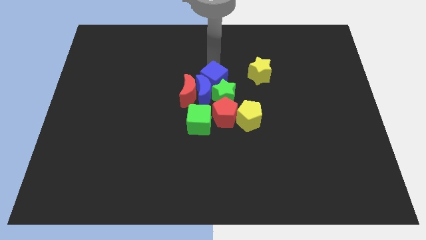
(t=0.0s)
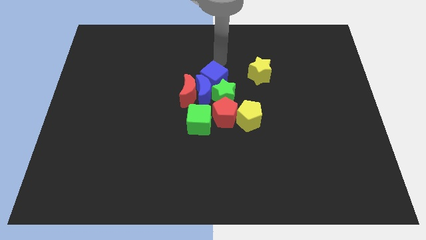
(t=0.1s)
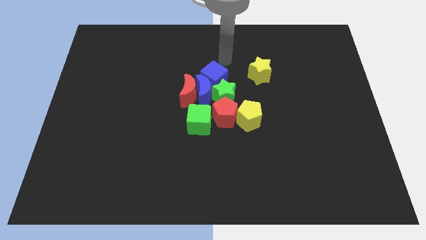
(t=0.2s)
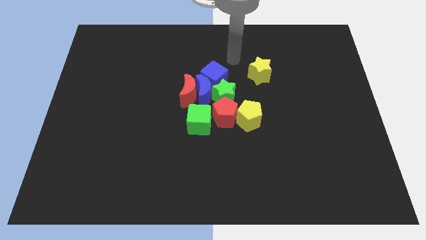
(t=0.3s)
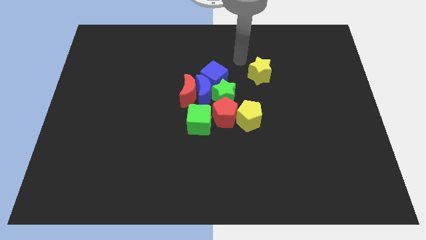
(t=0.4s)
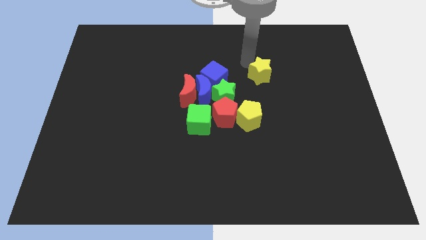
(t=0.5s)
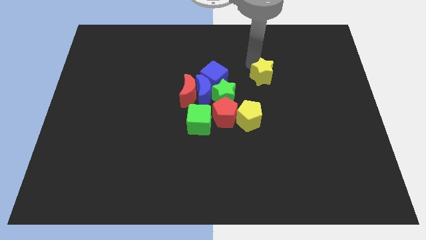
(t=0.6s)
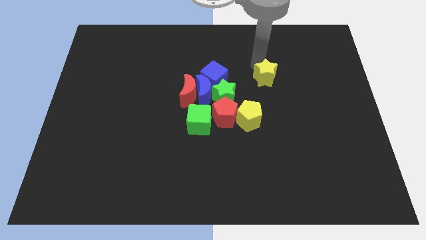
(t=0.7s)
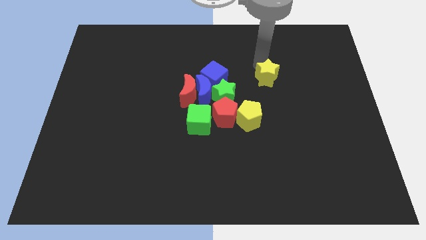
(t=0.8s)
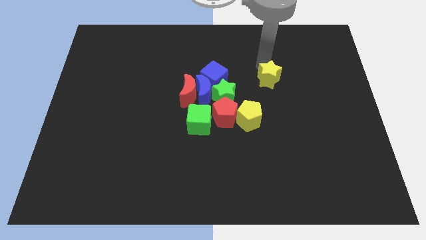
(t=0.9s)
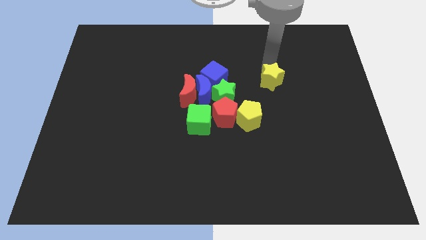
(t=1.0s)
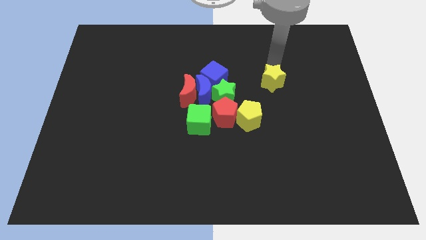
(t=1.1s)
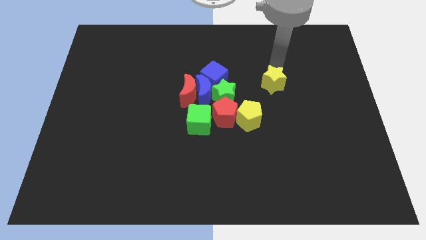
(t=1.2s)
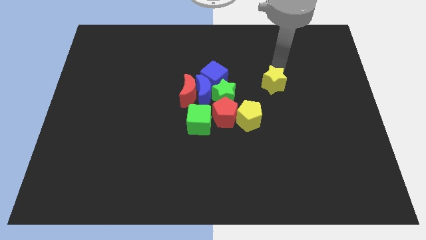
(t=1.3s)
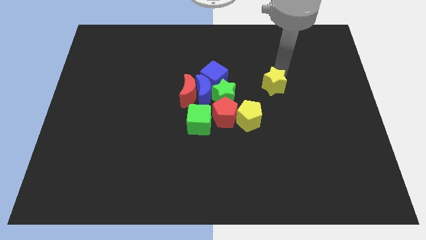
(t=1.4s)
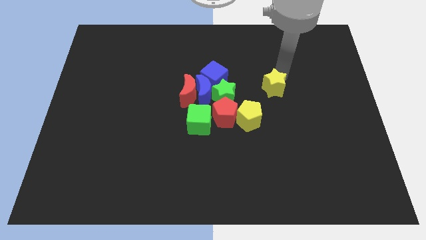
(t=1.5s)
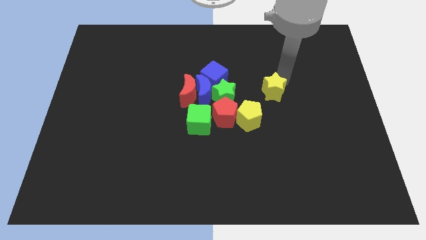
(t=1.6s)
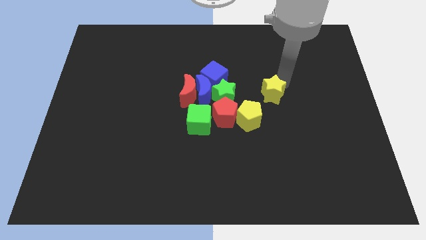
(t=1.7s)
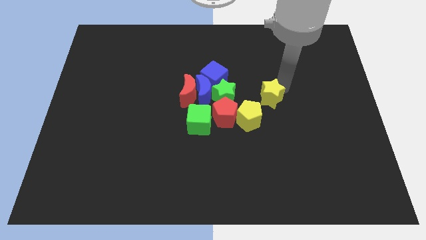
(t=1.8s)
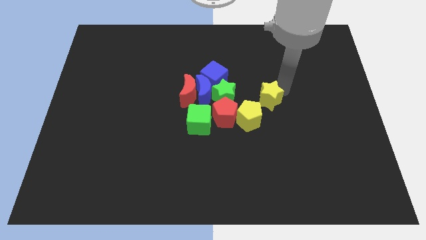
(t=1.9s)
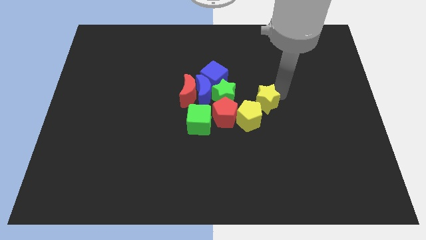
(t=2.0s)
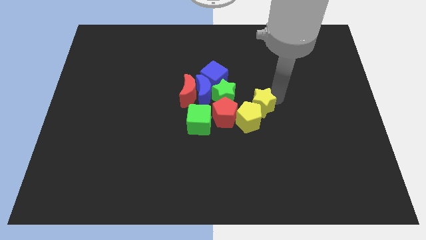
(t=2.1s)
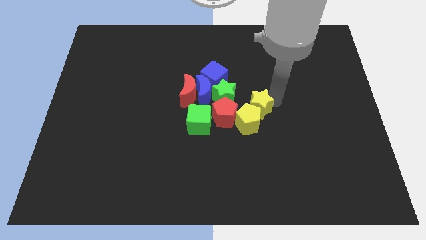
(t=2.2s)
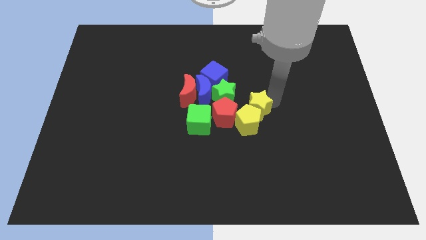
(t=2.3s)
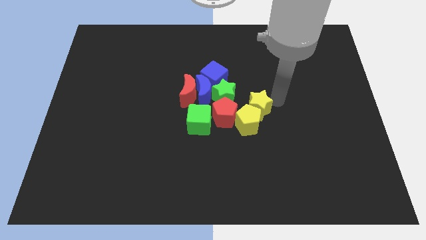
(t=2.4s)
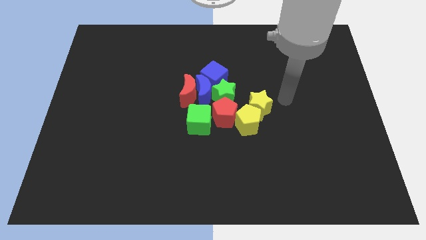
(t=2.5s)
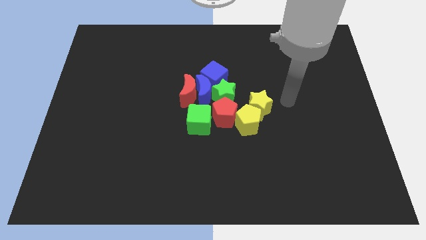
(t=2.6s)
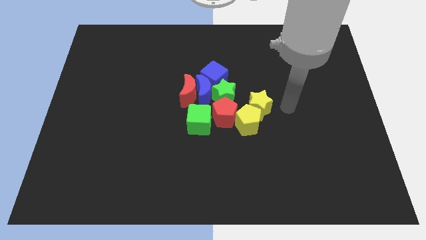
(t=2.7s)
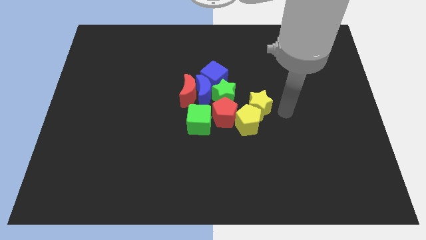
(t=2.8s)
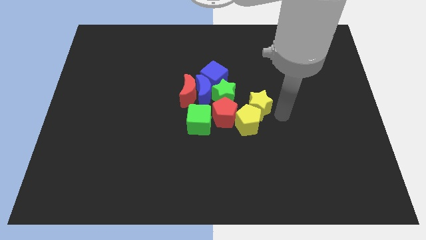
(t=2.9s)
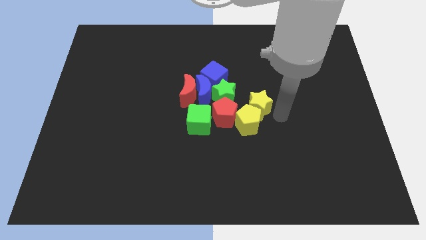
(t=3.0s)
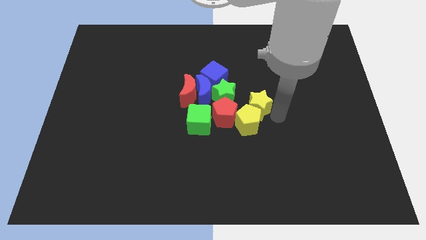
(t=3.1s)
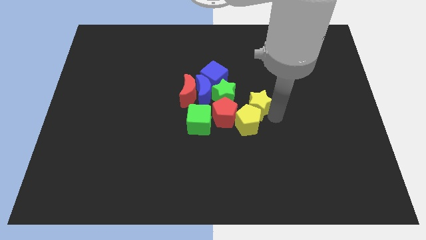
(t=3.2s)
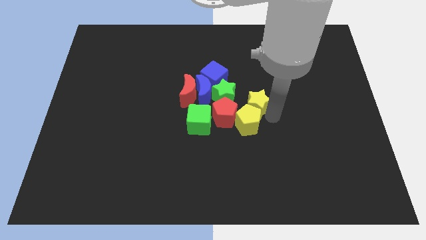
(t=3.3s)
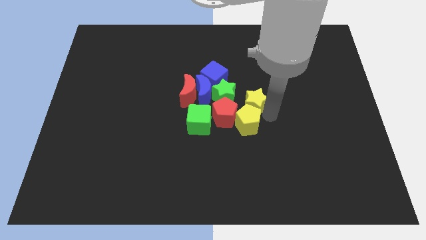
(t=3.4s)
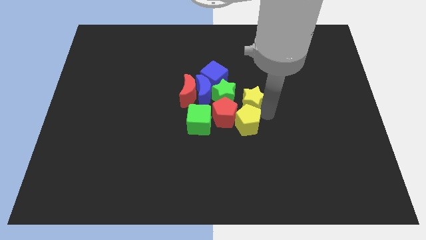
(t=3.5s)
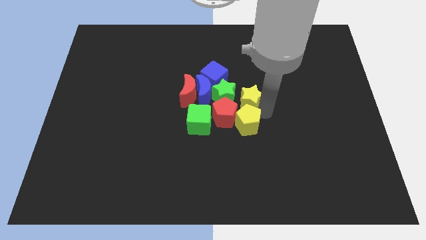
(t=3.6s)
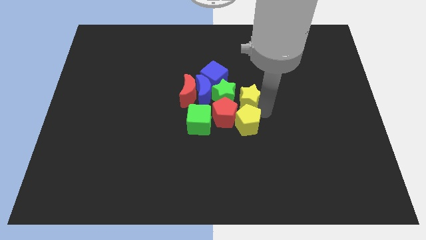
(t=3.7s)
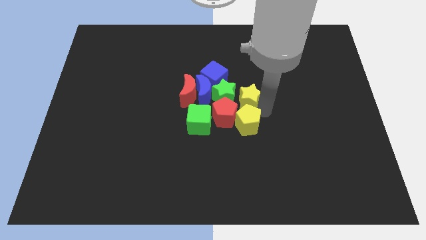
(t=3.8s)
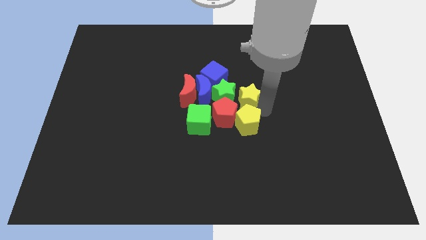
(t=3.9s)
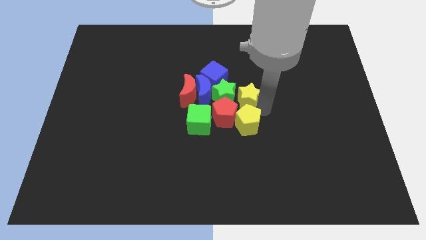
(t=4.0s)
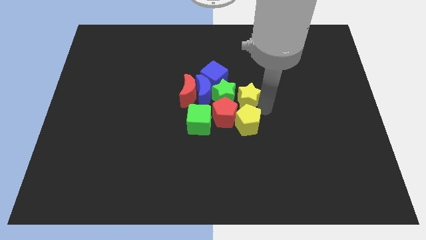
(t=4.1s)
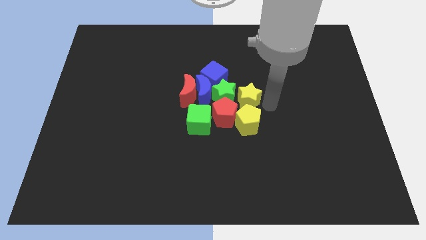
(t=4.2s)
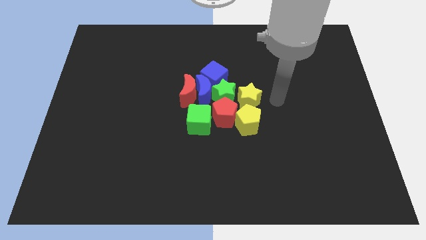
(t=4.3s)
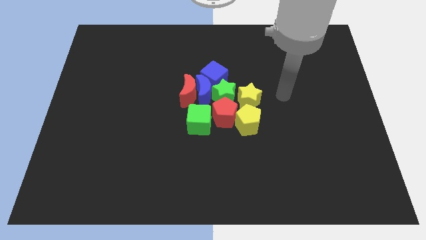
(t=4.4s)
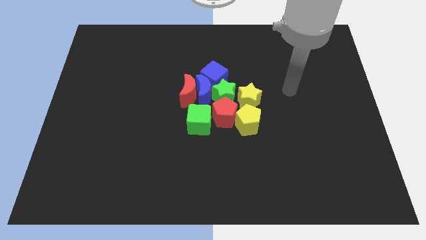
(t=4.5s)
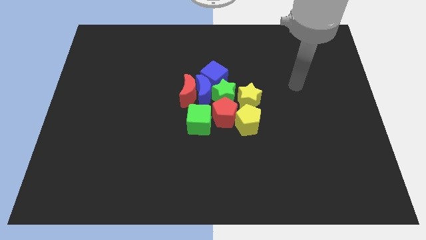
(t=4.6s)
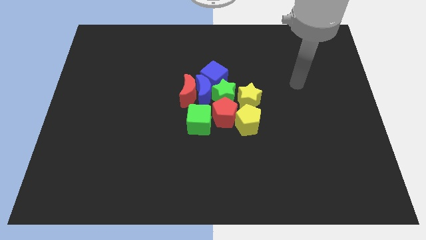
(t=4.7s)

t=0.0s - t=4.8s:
move yellow star above the yellow pentagon

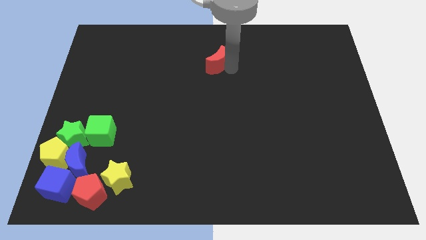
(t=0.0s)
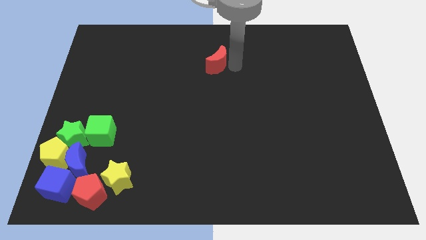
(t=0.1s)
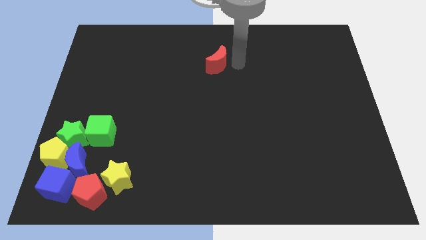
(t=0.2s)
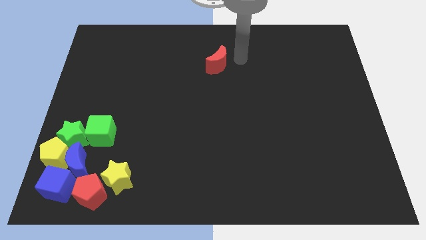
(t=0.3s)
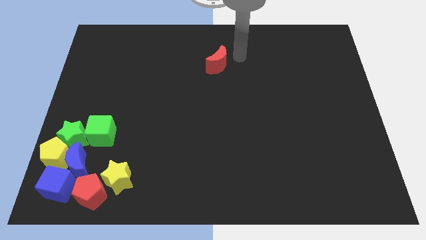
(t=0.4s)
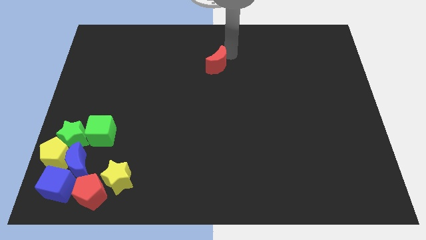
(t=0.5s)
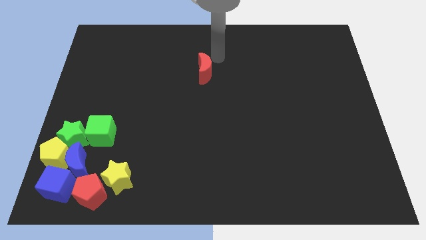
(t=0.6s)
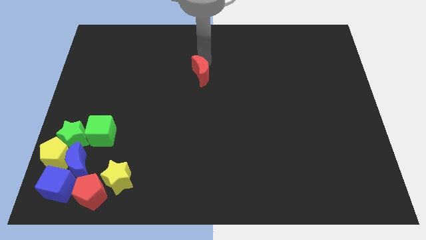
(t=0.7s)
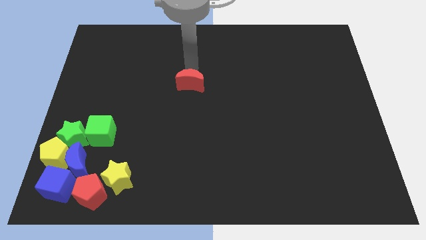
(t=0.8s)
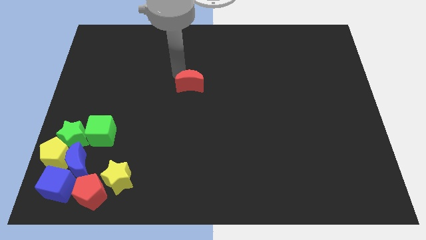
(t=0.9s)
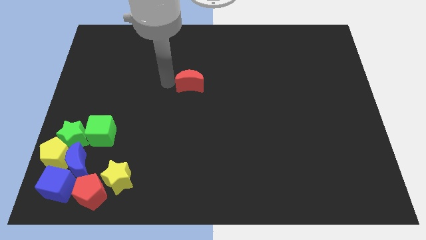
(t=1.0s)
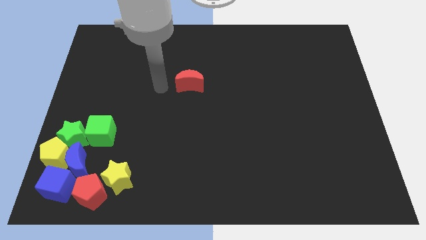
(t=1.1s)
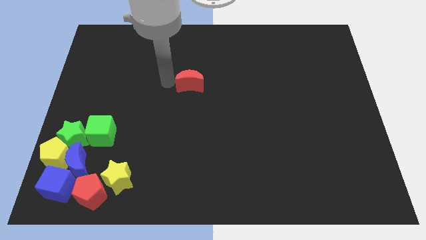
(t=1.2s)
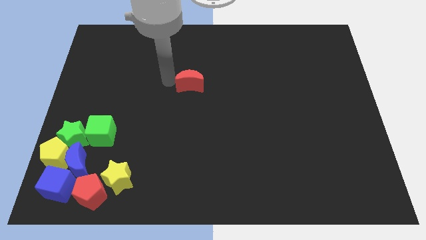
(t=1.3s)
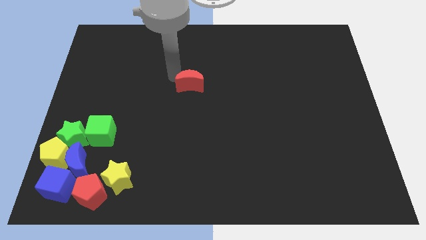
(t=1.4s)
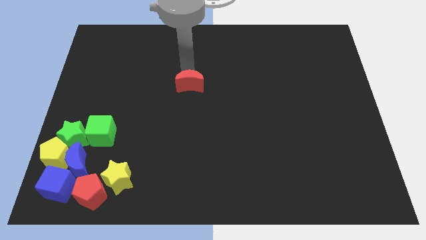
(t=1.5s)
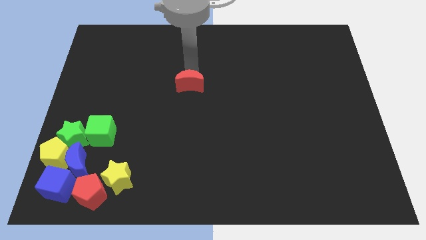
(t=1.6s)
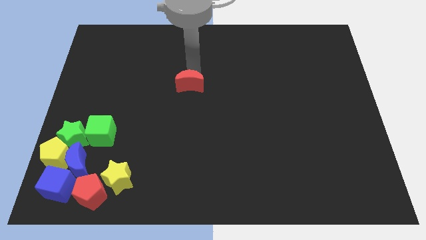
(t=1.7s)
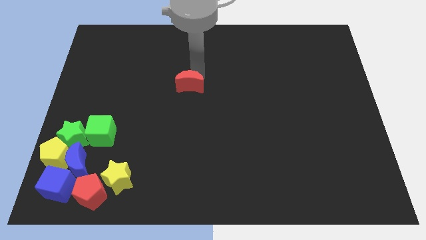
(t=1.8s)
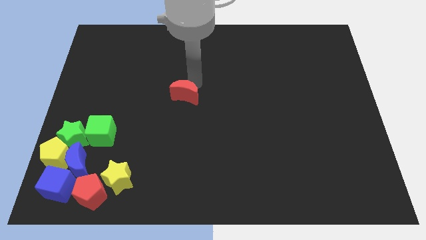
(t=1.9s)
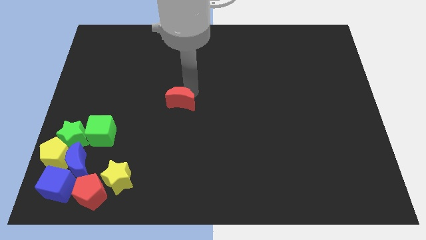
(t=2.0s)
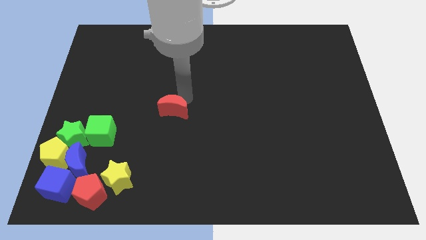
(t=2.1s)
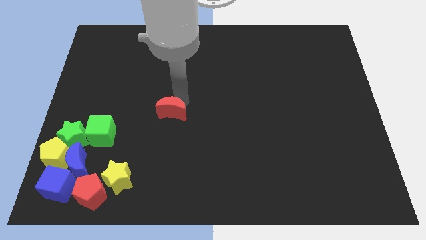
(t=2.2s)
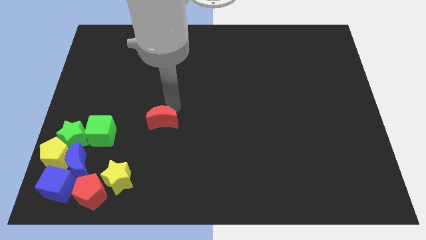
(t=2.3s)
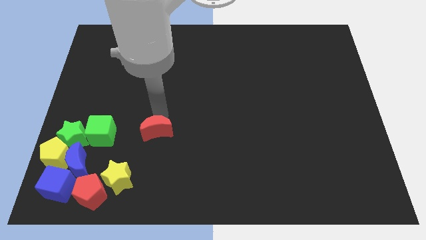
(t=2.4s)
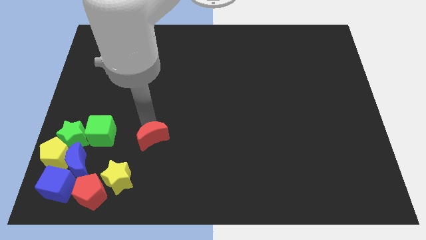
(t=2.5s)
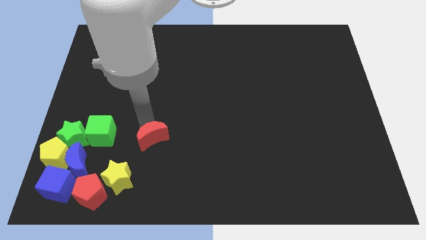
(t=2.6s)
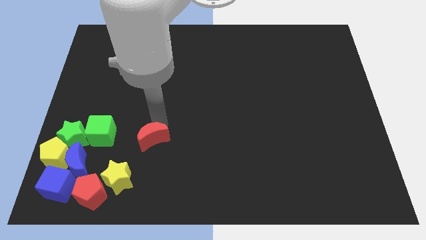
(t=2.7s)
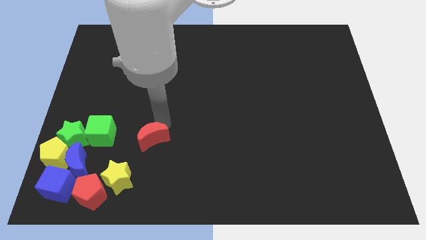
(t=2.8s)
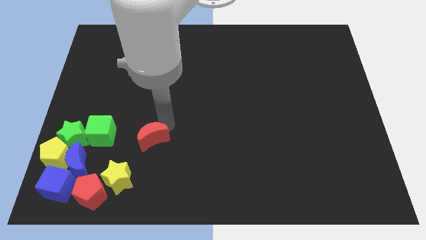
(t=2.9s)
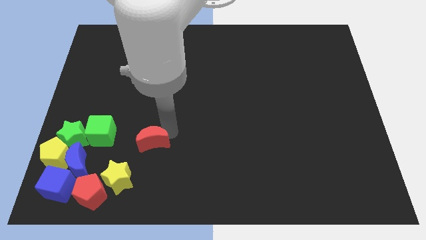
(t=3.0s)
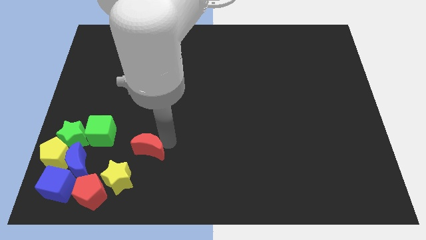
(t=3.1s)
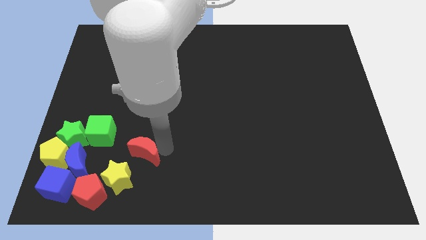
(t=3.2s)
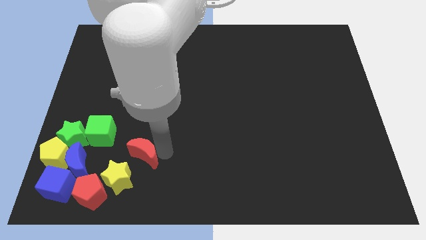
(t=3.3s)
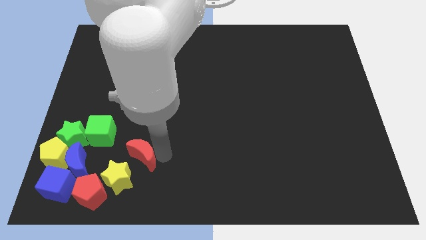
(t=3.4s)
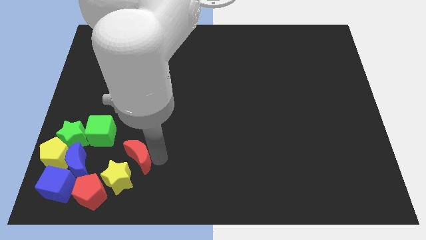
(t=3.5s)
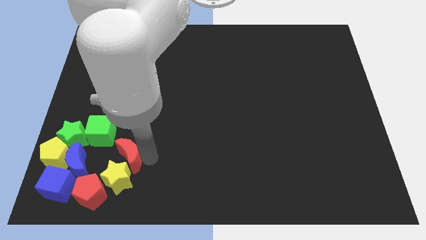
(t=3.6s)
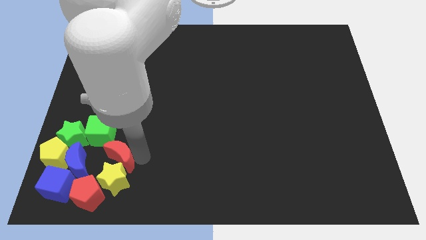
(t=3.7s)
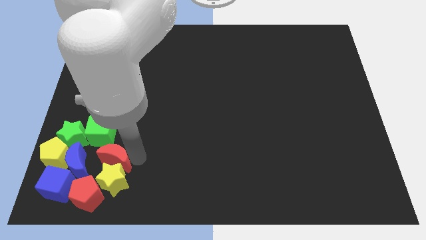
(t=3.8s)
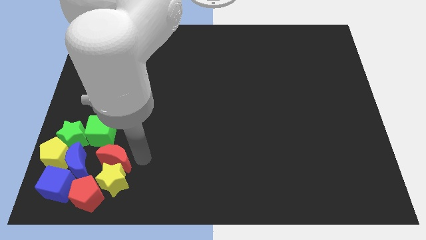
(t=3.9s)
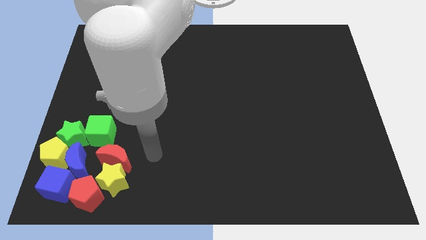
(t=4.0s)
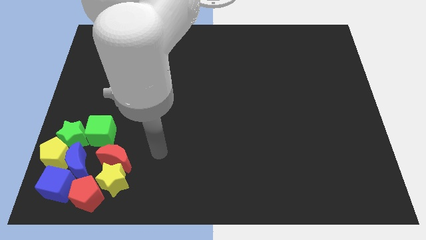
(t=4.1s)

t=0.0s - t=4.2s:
push the red crescent into the group of blocks
